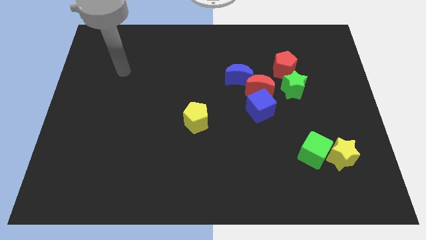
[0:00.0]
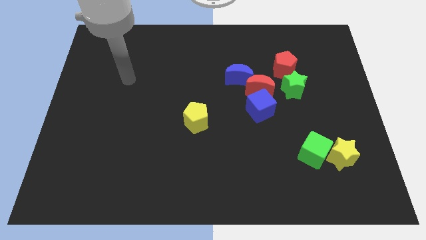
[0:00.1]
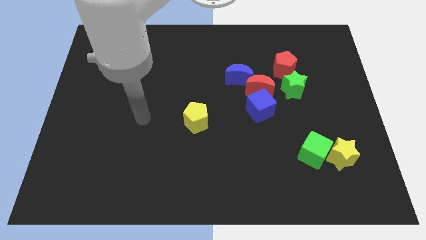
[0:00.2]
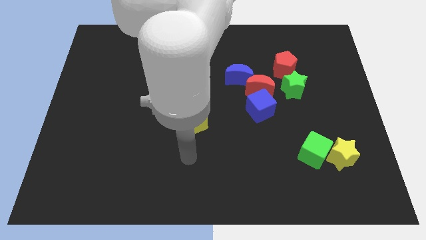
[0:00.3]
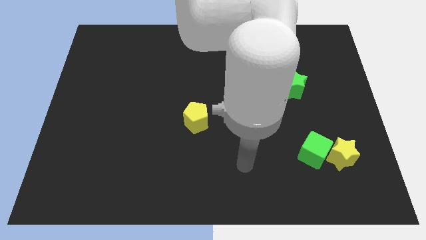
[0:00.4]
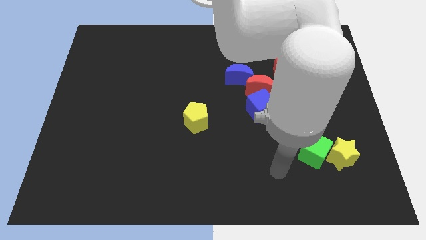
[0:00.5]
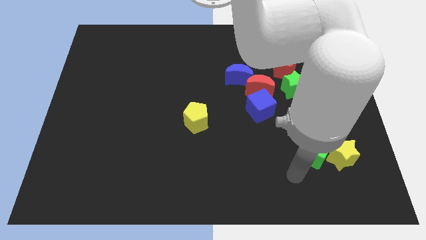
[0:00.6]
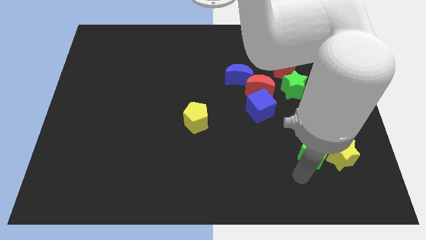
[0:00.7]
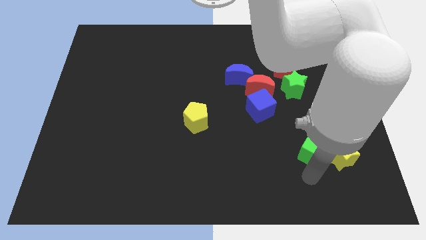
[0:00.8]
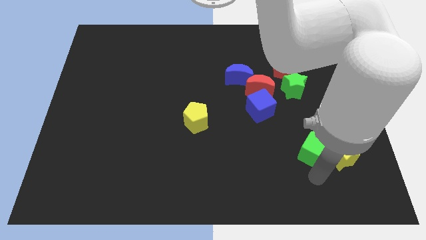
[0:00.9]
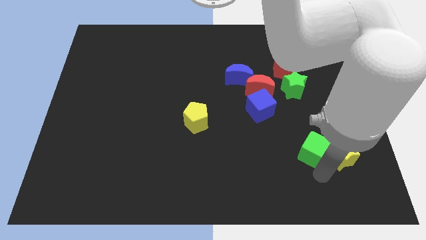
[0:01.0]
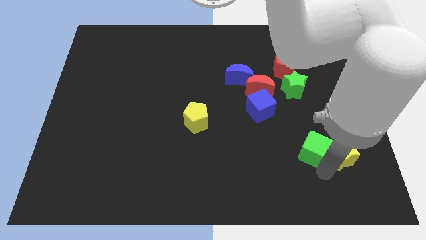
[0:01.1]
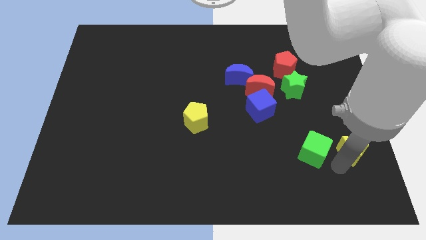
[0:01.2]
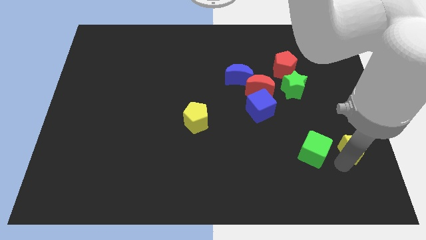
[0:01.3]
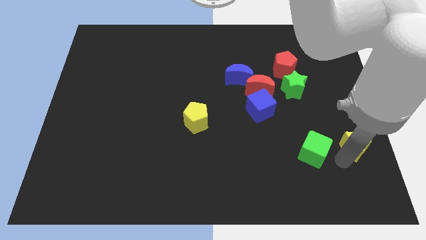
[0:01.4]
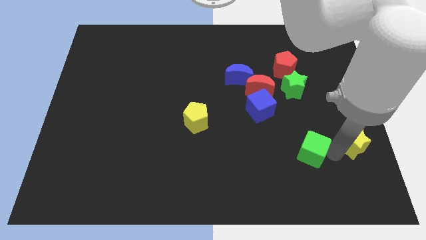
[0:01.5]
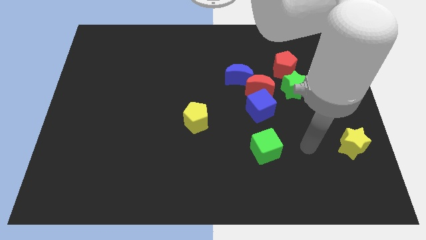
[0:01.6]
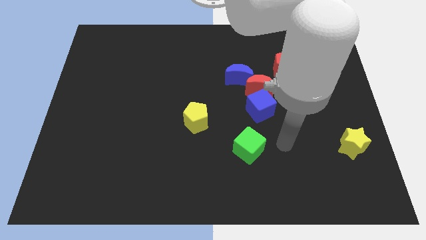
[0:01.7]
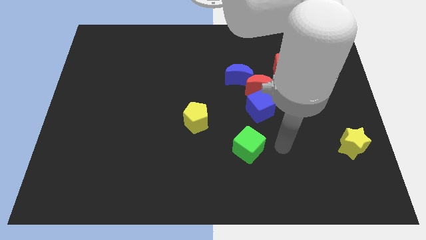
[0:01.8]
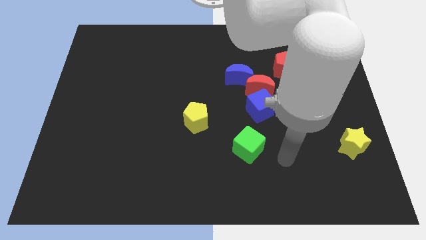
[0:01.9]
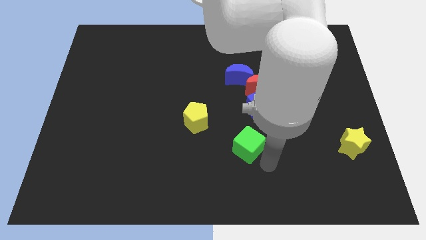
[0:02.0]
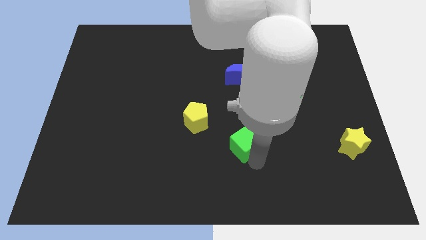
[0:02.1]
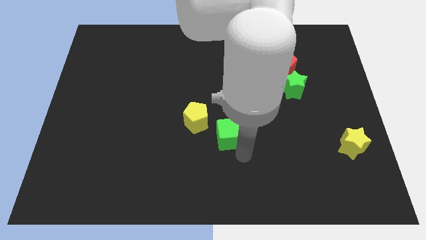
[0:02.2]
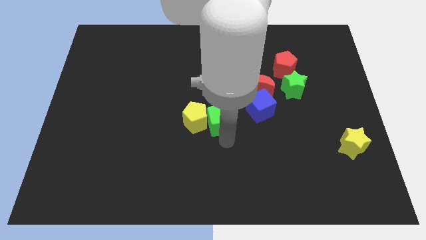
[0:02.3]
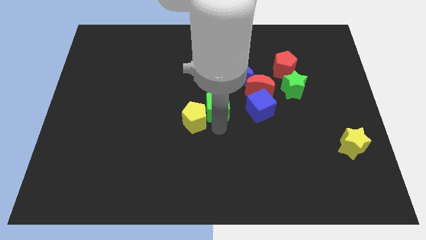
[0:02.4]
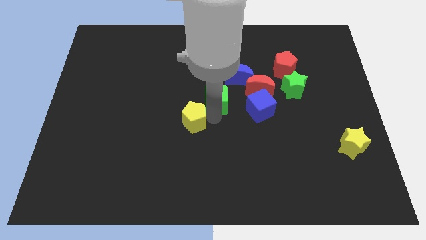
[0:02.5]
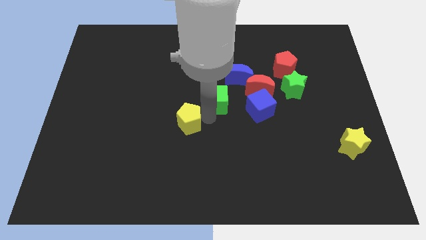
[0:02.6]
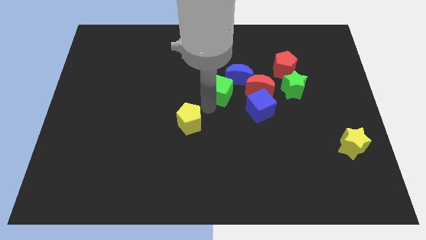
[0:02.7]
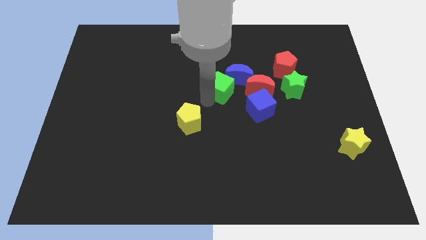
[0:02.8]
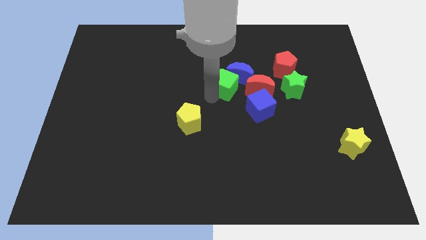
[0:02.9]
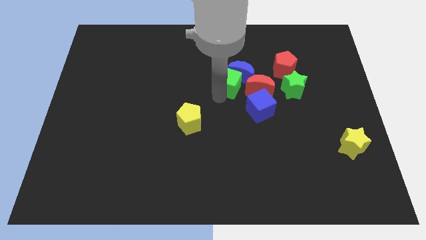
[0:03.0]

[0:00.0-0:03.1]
slide the green cube to the blue moon

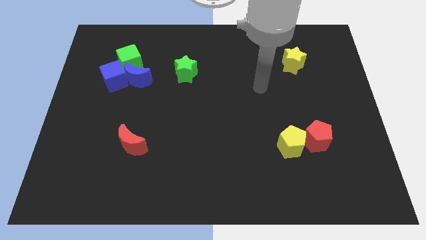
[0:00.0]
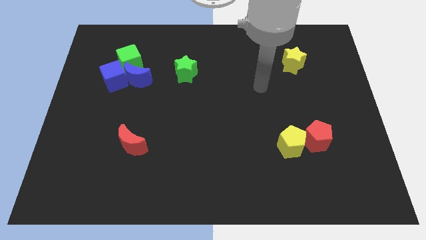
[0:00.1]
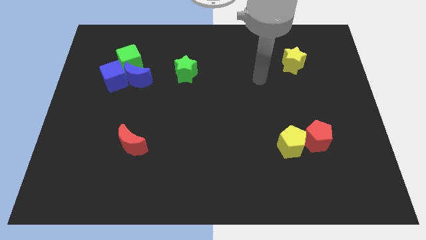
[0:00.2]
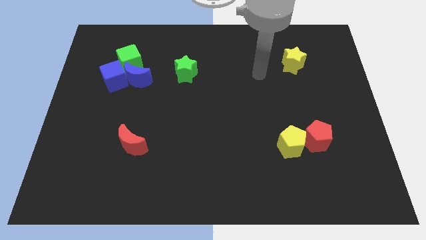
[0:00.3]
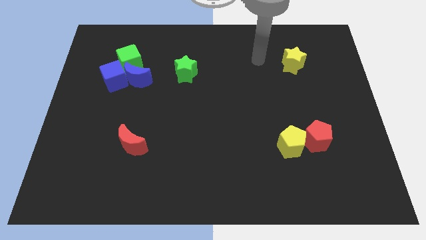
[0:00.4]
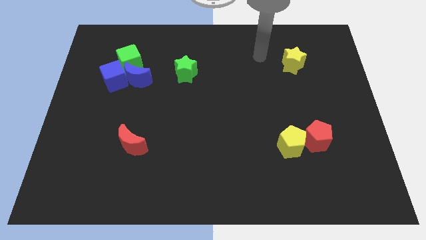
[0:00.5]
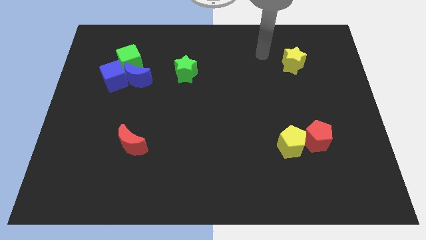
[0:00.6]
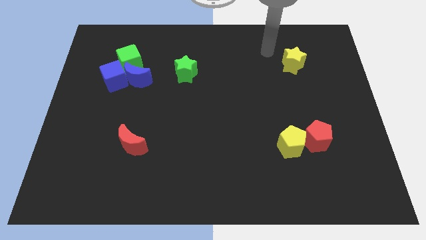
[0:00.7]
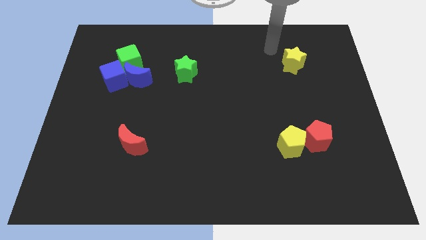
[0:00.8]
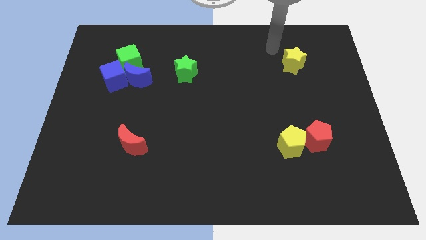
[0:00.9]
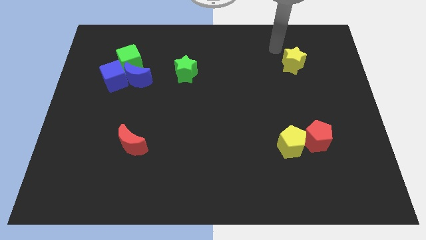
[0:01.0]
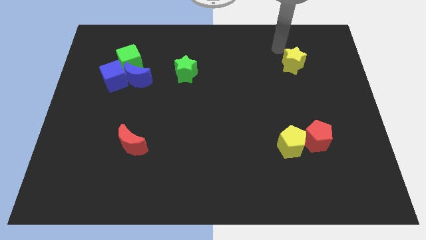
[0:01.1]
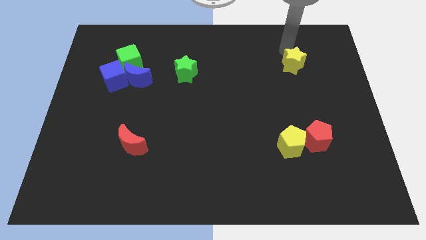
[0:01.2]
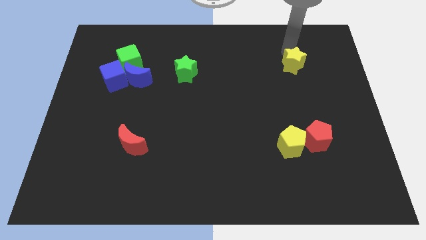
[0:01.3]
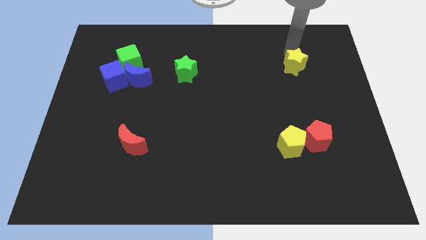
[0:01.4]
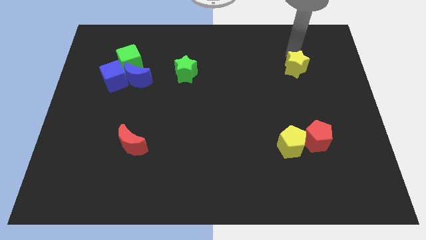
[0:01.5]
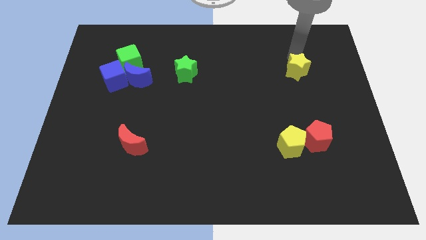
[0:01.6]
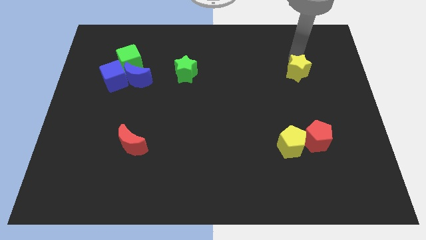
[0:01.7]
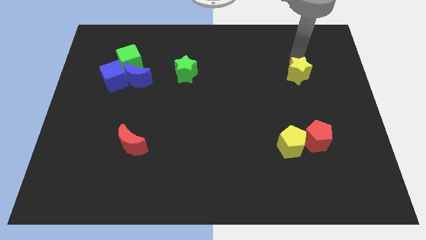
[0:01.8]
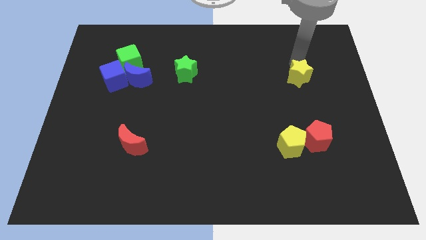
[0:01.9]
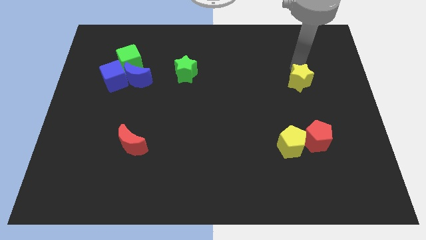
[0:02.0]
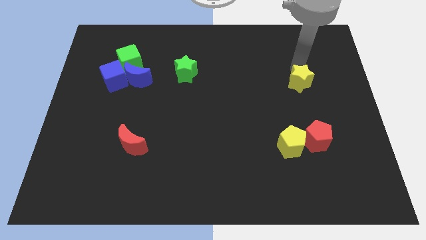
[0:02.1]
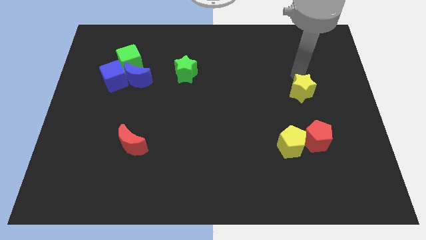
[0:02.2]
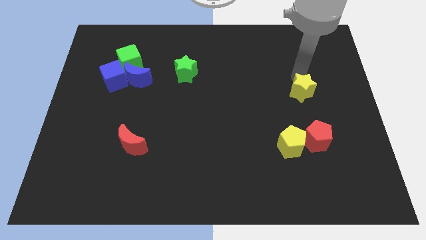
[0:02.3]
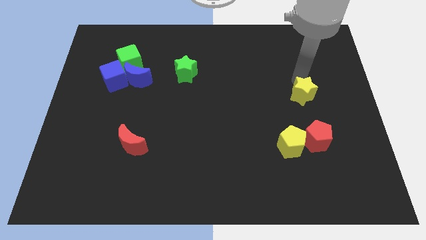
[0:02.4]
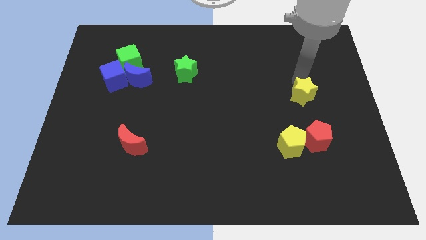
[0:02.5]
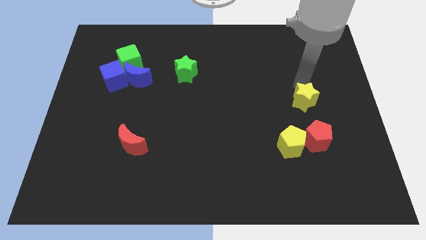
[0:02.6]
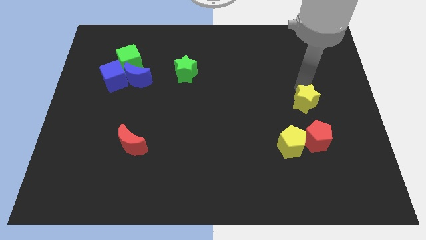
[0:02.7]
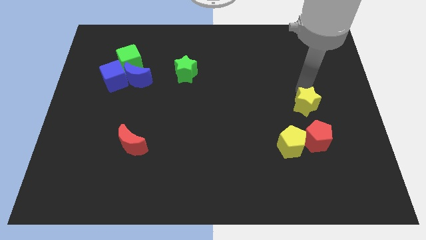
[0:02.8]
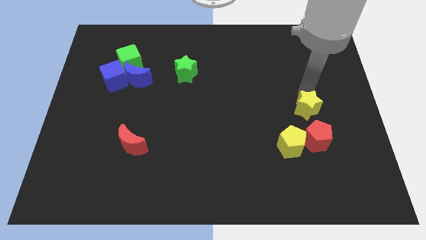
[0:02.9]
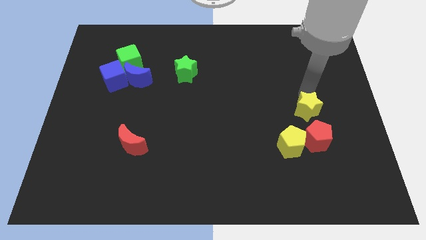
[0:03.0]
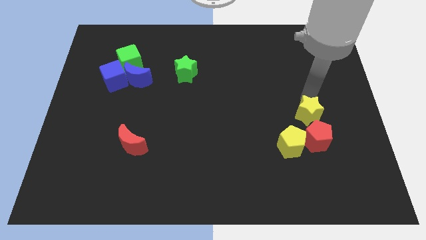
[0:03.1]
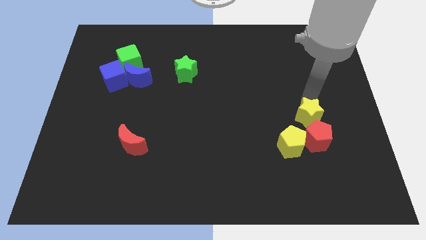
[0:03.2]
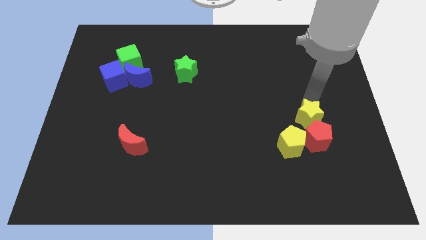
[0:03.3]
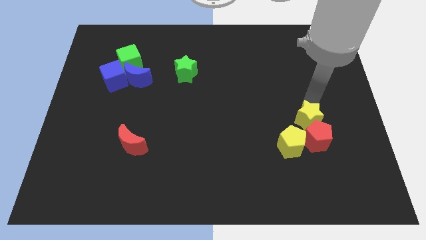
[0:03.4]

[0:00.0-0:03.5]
move the yellow star towards the red pentagon

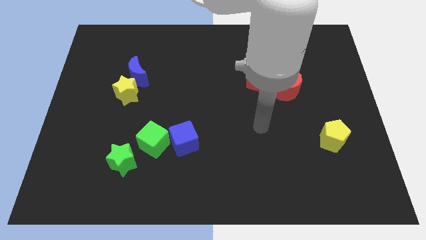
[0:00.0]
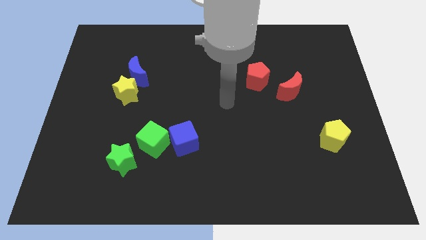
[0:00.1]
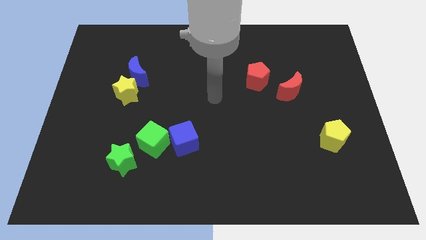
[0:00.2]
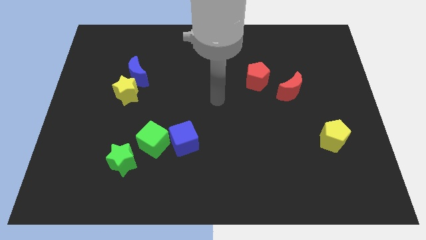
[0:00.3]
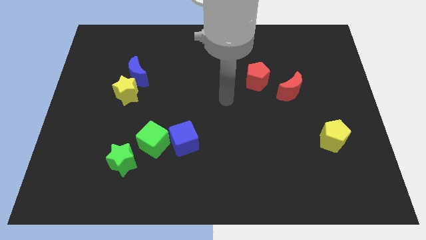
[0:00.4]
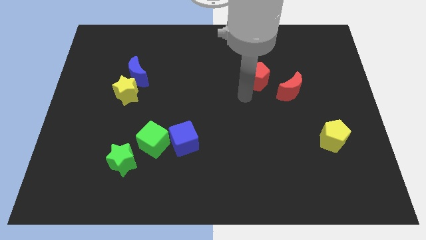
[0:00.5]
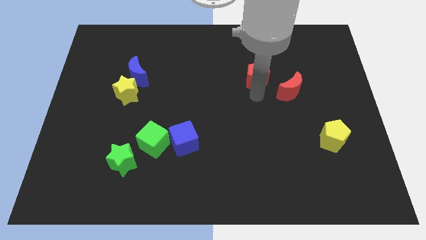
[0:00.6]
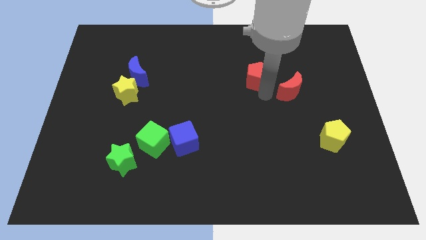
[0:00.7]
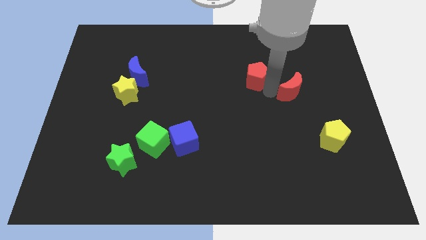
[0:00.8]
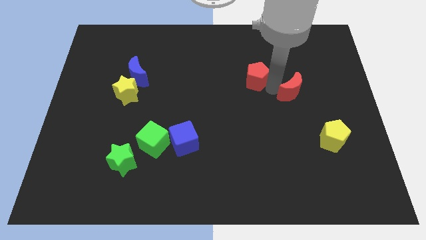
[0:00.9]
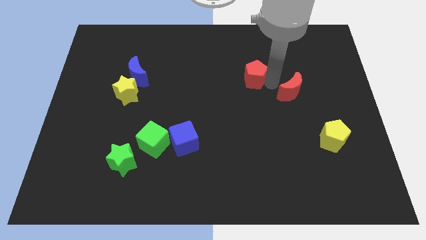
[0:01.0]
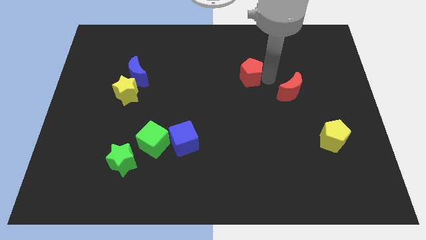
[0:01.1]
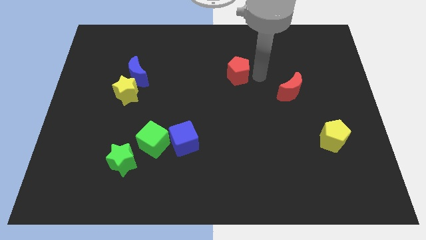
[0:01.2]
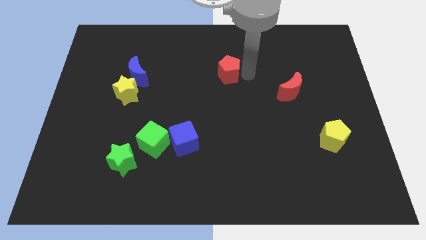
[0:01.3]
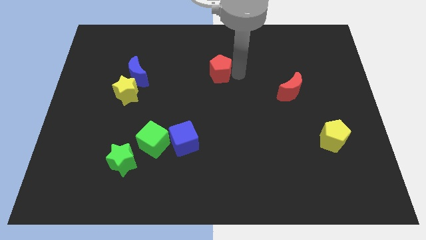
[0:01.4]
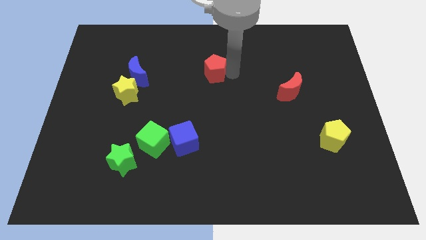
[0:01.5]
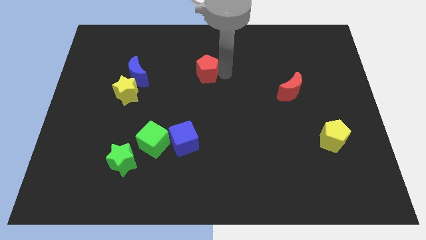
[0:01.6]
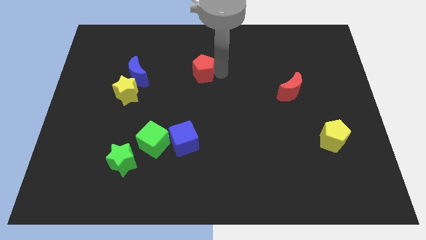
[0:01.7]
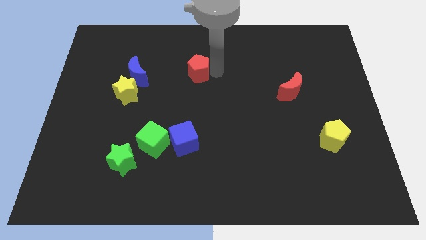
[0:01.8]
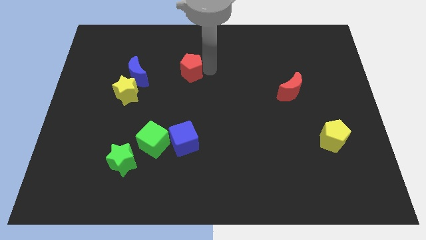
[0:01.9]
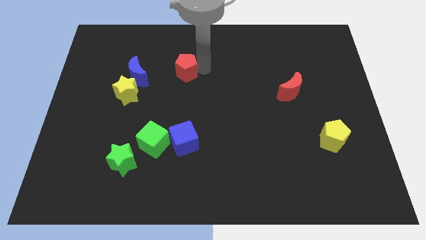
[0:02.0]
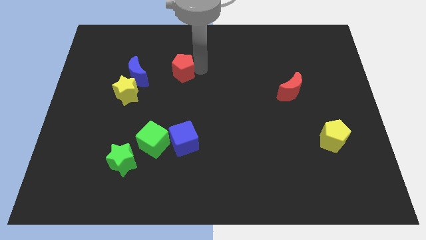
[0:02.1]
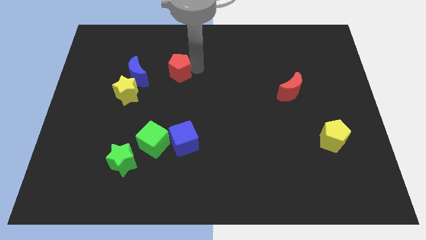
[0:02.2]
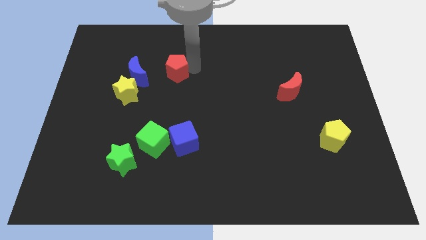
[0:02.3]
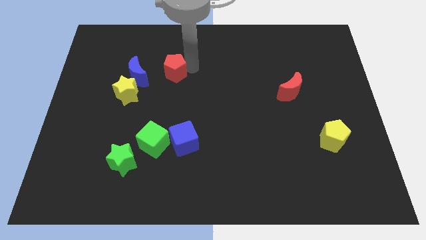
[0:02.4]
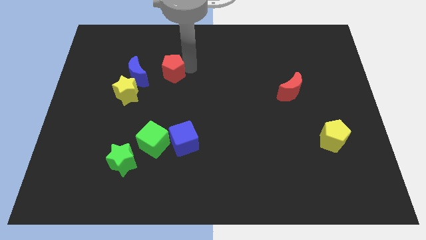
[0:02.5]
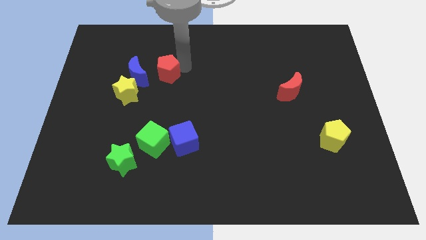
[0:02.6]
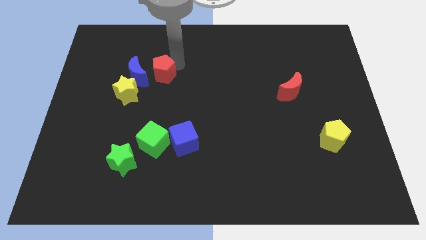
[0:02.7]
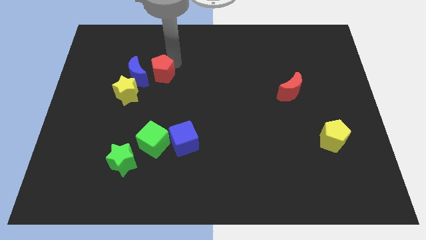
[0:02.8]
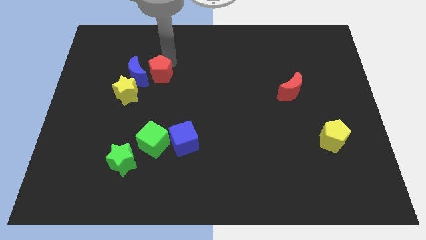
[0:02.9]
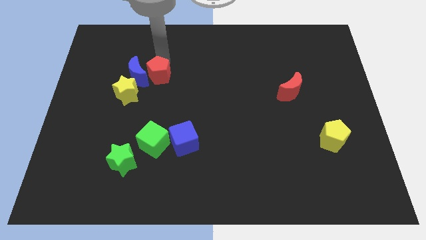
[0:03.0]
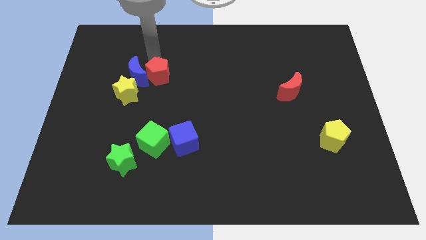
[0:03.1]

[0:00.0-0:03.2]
push the red pentagon to the blue moon
